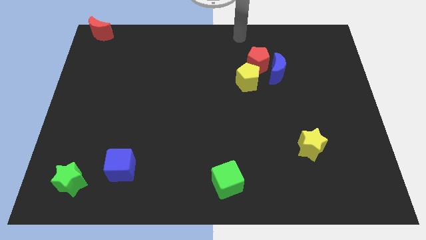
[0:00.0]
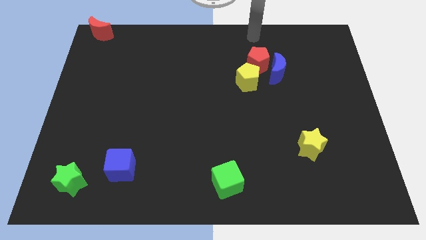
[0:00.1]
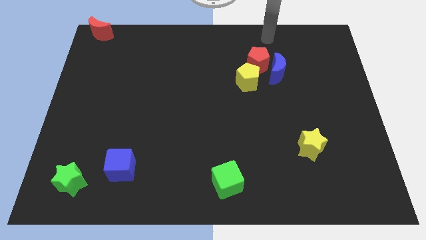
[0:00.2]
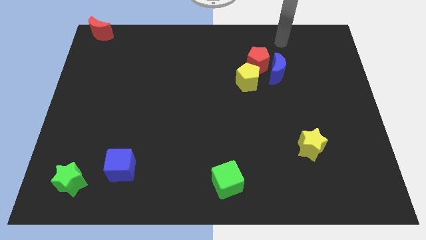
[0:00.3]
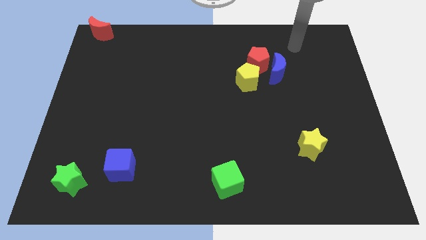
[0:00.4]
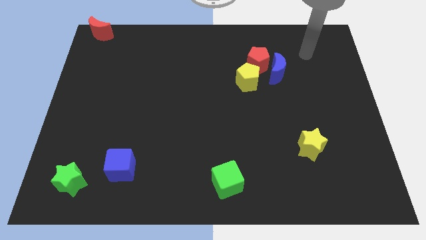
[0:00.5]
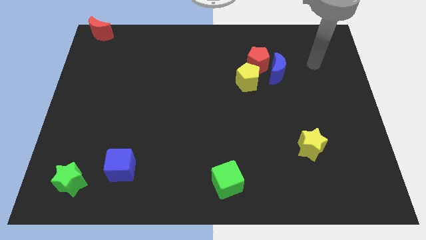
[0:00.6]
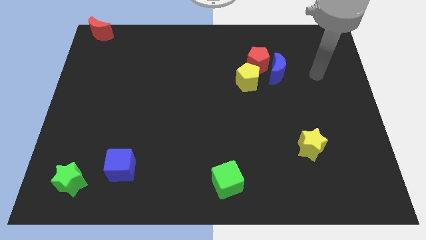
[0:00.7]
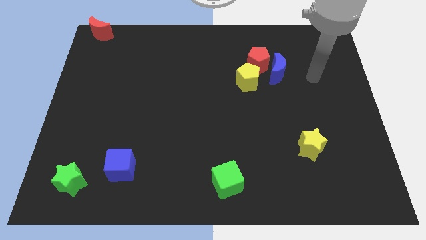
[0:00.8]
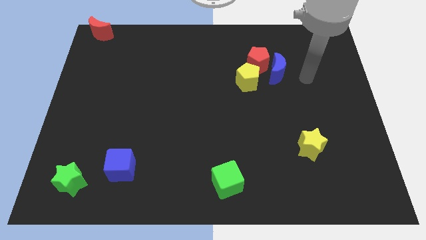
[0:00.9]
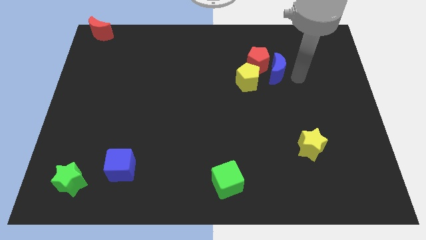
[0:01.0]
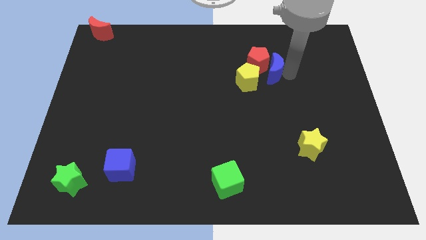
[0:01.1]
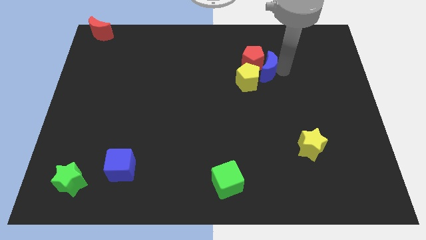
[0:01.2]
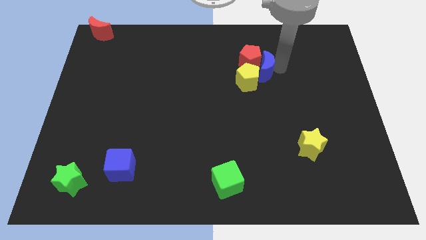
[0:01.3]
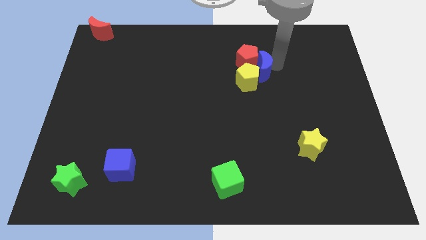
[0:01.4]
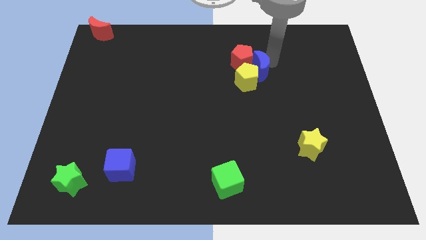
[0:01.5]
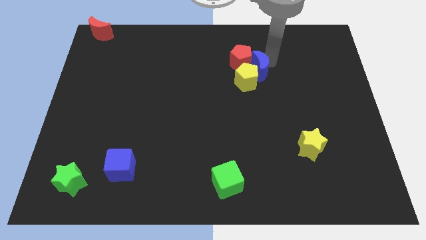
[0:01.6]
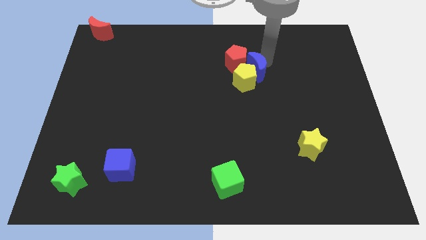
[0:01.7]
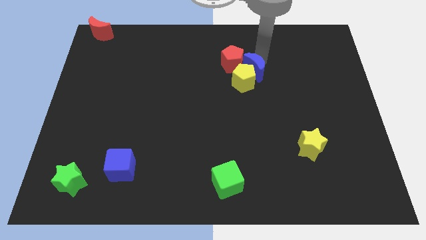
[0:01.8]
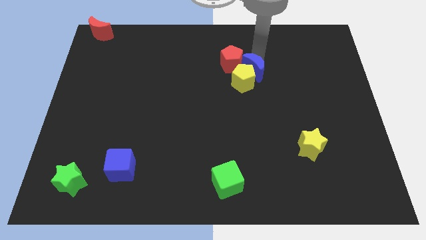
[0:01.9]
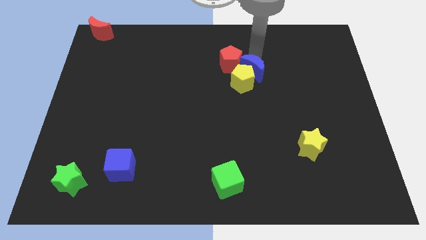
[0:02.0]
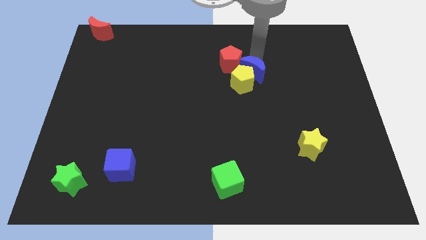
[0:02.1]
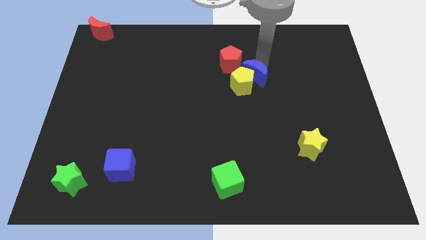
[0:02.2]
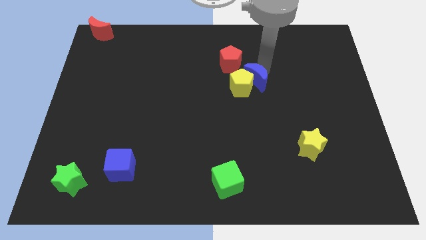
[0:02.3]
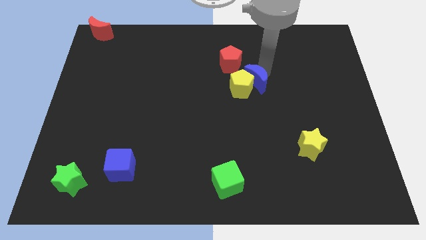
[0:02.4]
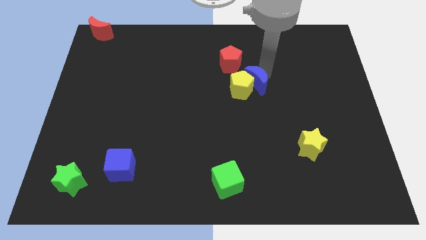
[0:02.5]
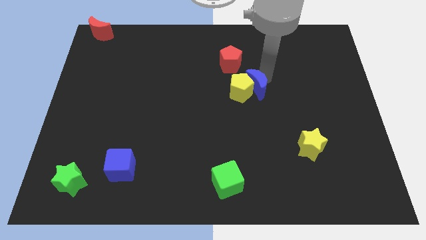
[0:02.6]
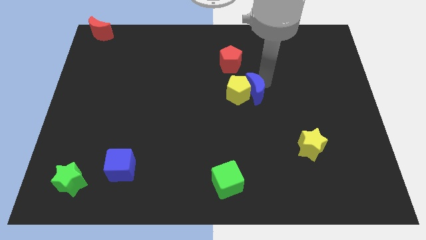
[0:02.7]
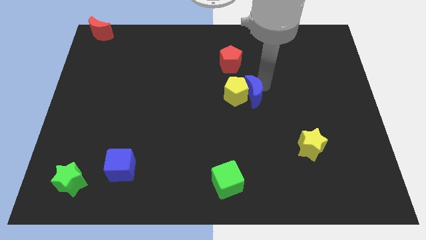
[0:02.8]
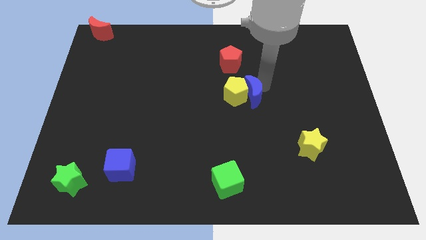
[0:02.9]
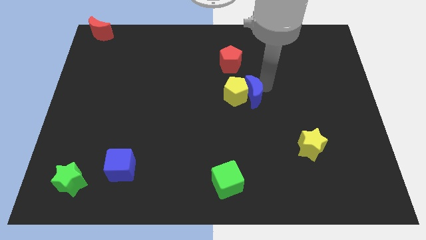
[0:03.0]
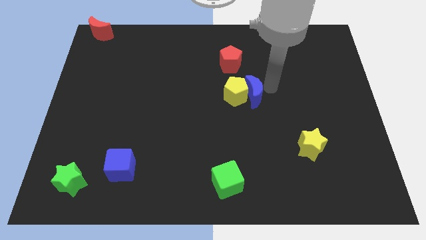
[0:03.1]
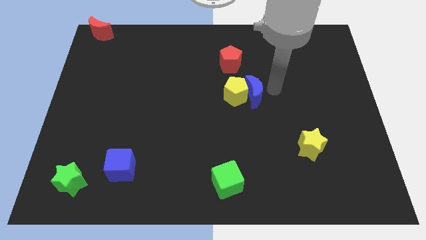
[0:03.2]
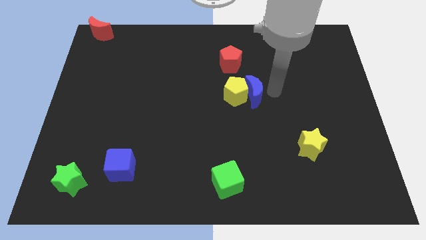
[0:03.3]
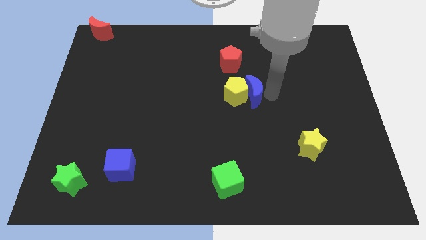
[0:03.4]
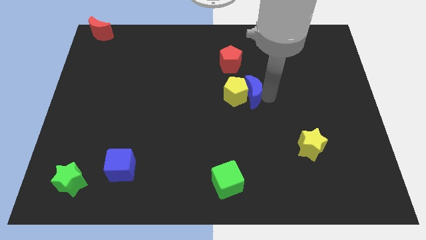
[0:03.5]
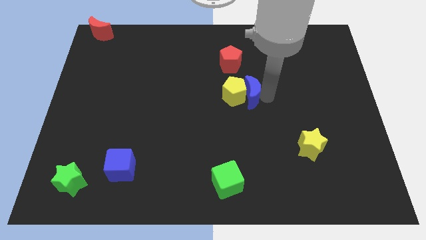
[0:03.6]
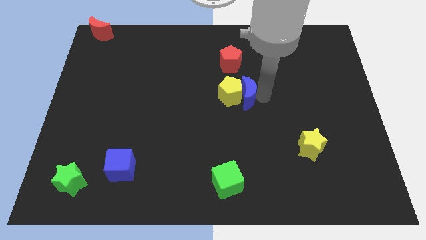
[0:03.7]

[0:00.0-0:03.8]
move the yellow pentagon along with blue crescent to the bottom side of the red pentagon

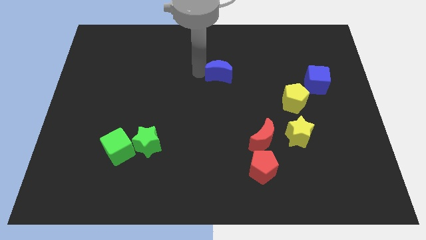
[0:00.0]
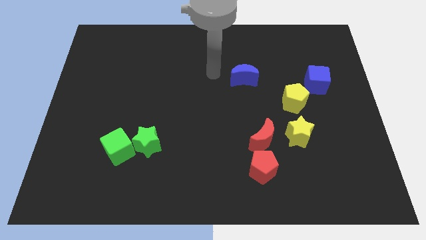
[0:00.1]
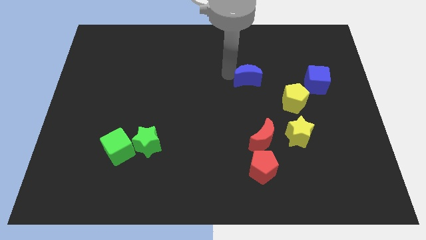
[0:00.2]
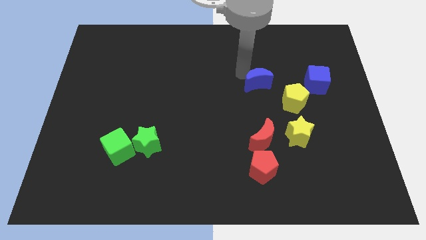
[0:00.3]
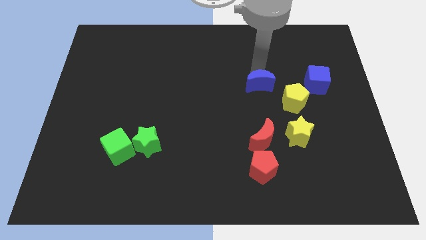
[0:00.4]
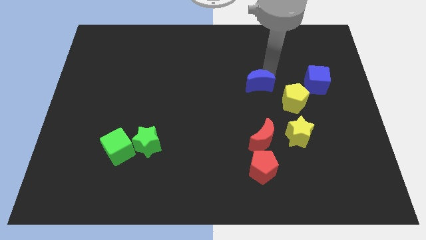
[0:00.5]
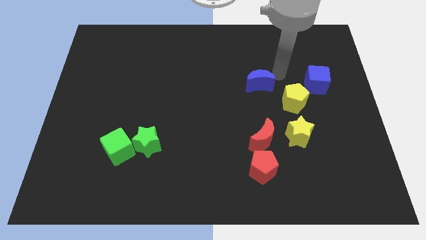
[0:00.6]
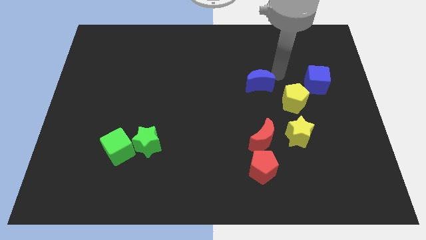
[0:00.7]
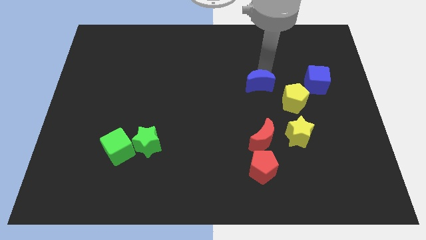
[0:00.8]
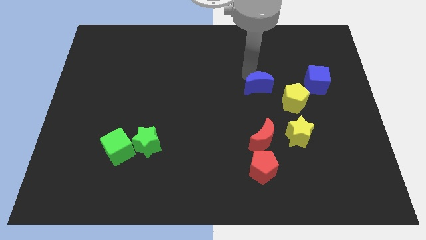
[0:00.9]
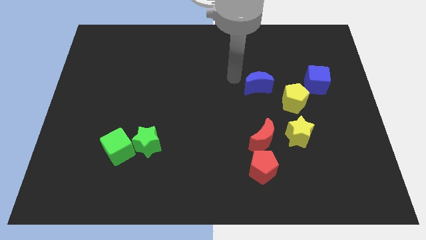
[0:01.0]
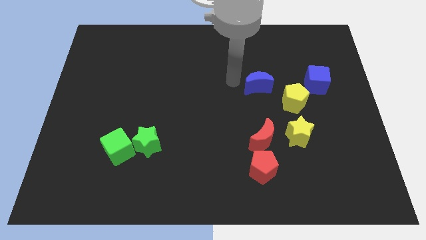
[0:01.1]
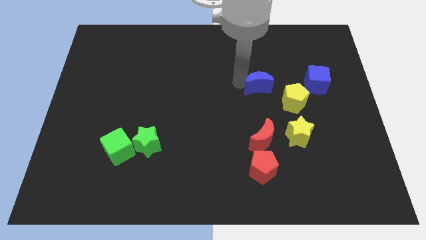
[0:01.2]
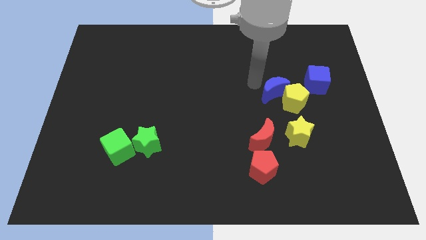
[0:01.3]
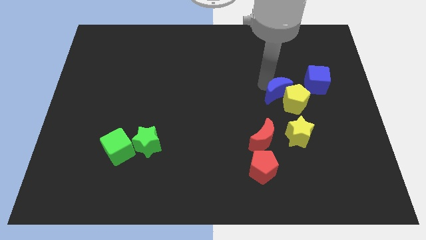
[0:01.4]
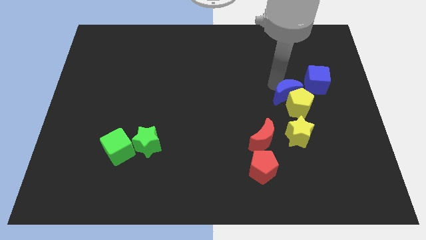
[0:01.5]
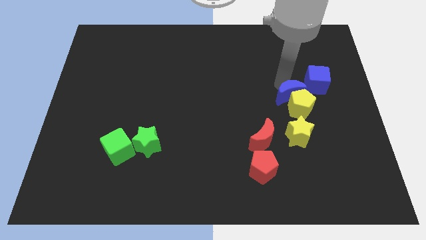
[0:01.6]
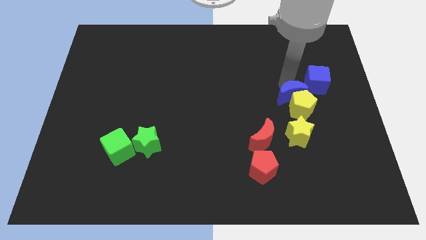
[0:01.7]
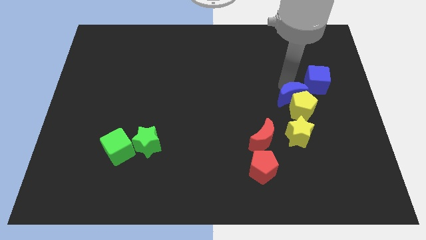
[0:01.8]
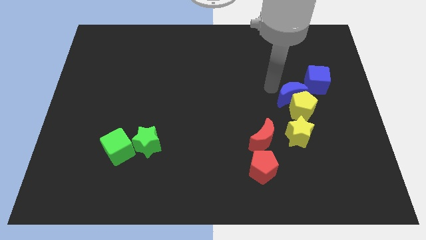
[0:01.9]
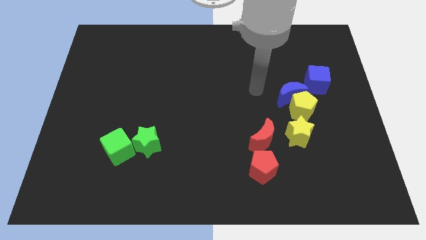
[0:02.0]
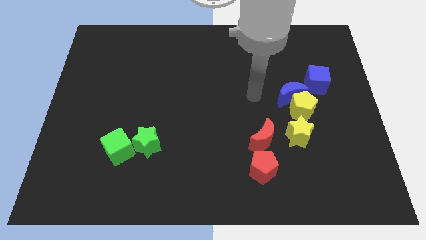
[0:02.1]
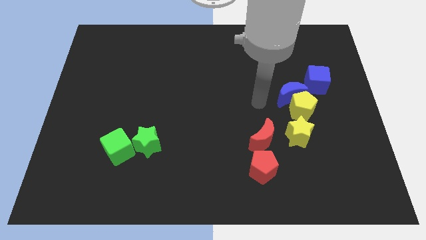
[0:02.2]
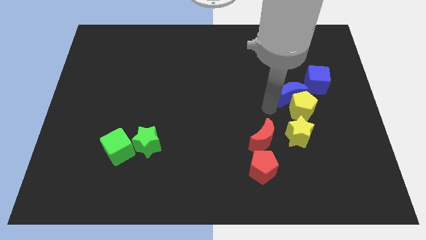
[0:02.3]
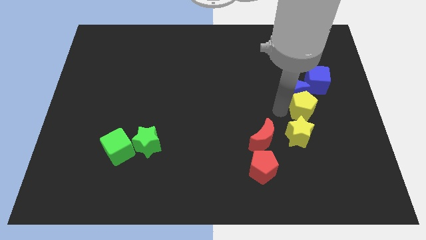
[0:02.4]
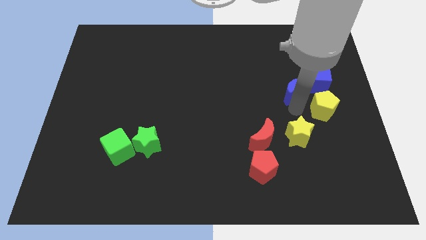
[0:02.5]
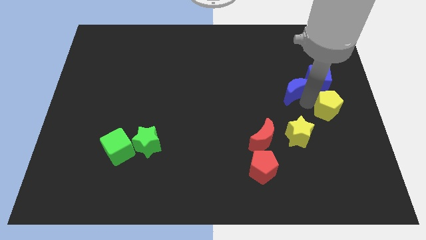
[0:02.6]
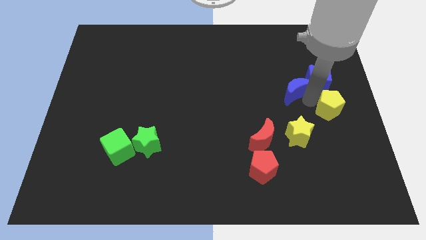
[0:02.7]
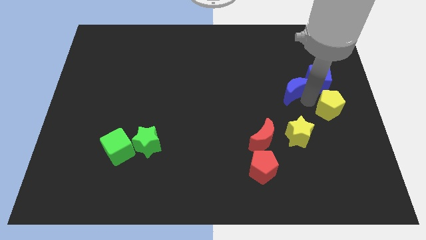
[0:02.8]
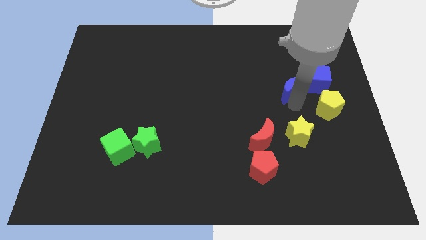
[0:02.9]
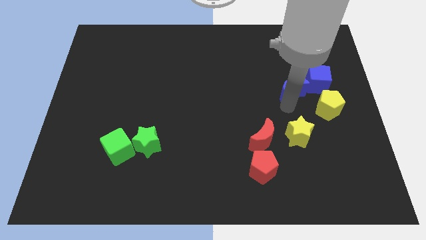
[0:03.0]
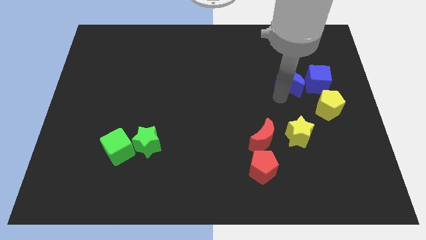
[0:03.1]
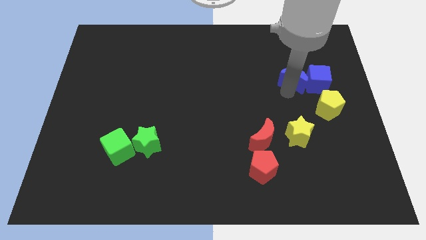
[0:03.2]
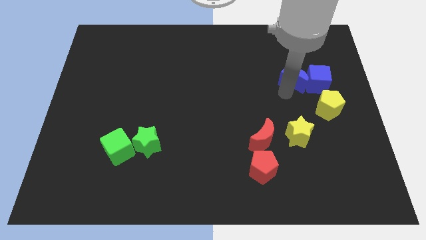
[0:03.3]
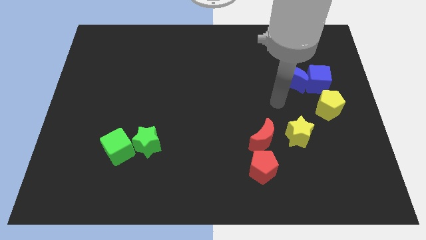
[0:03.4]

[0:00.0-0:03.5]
move the yellow pentagon and blue crescent to the bottom and left side of the blue cube

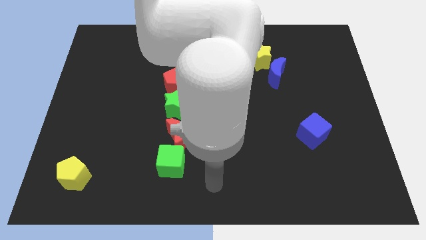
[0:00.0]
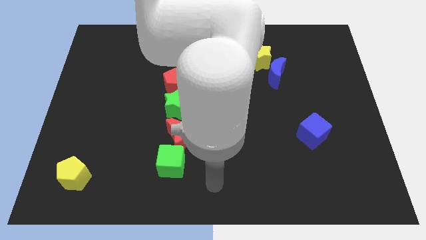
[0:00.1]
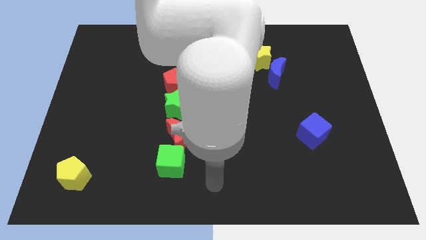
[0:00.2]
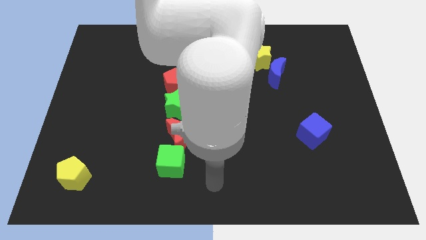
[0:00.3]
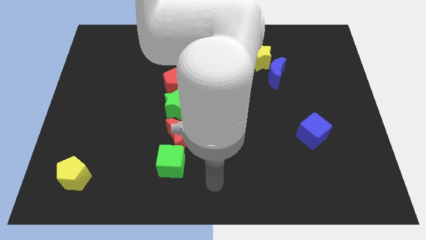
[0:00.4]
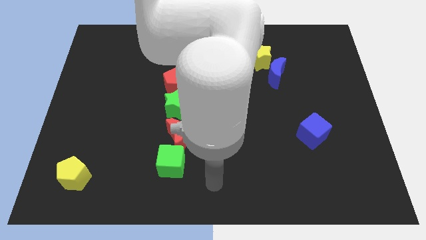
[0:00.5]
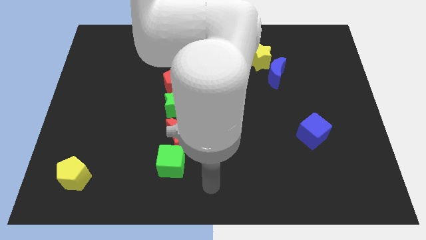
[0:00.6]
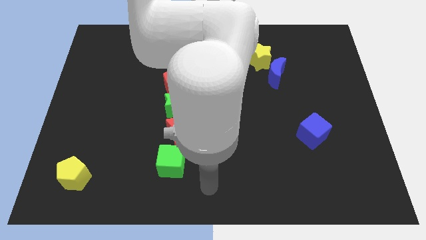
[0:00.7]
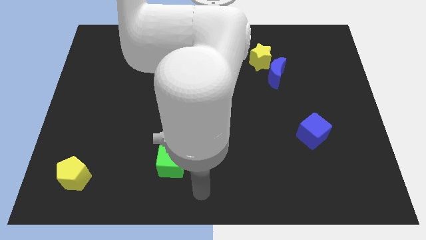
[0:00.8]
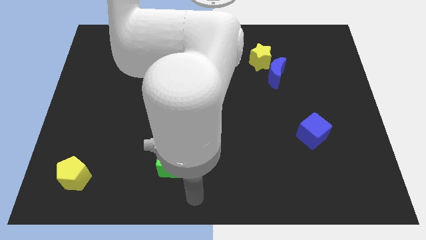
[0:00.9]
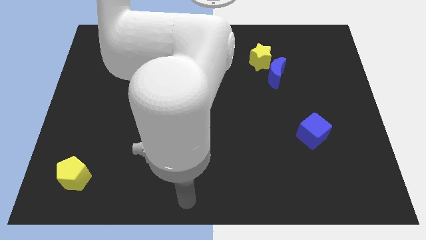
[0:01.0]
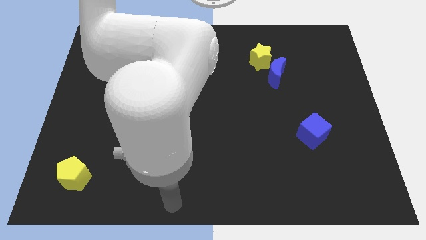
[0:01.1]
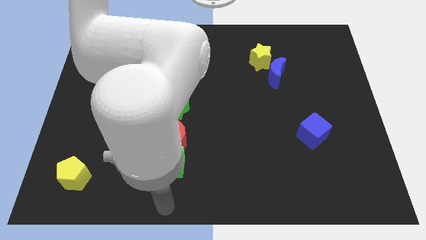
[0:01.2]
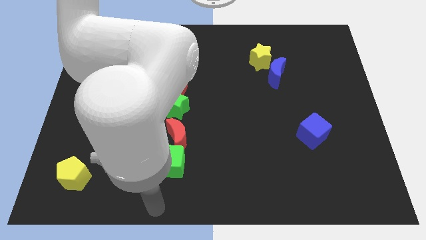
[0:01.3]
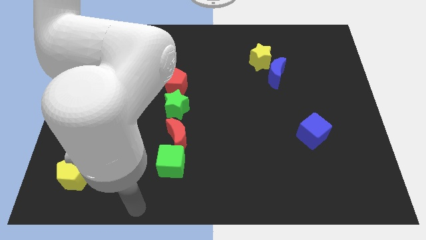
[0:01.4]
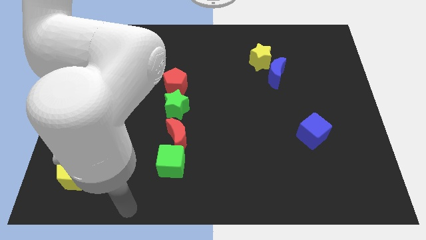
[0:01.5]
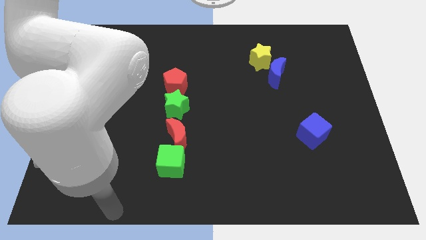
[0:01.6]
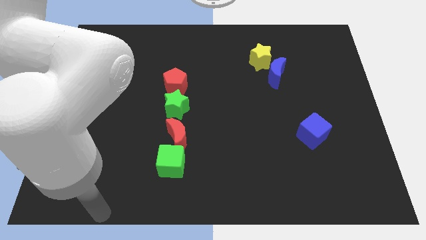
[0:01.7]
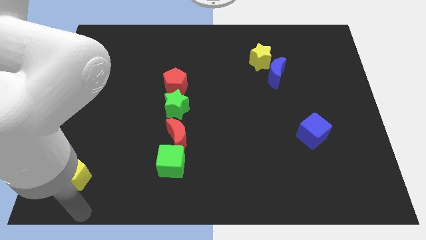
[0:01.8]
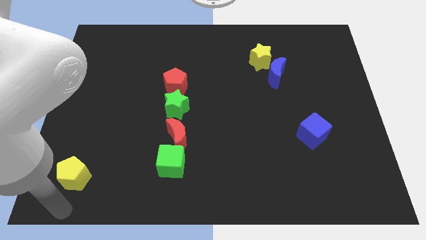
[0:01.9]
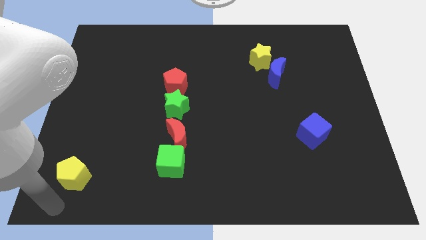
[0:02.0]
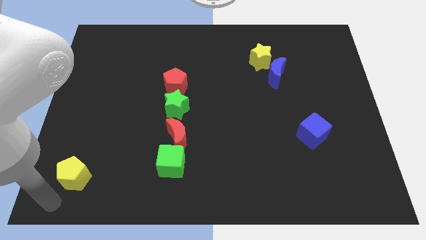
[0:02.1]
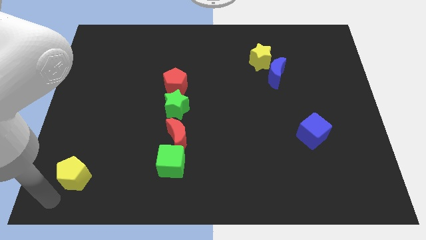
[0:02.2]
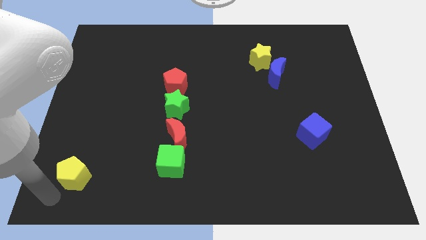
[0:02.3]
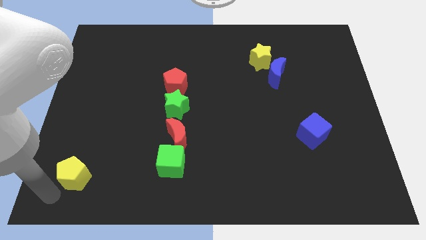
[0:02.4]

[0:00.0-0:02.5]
point your arm at the bottom of the yellow pentagon
